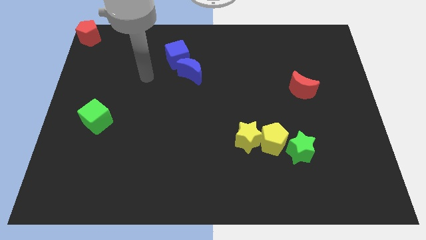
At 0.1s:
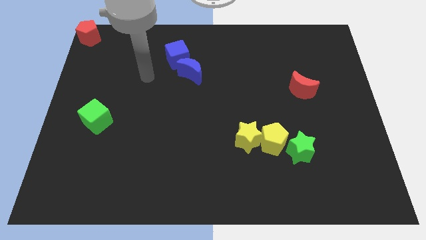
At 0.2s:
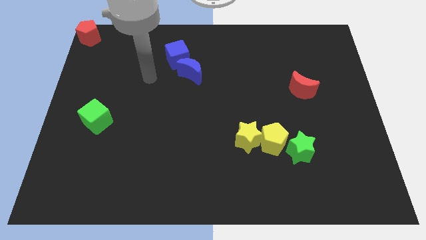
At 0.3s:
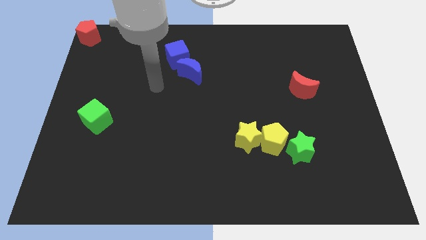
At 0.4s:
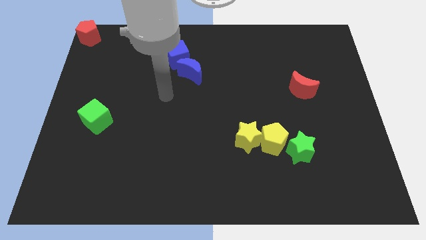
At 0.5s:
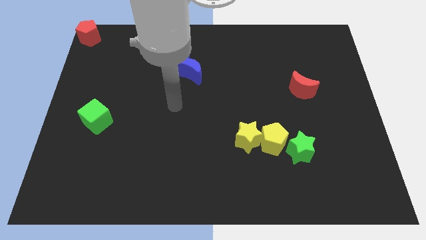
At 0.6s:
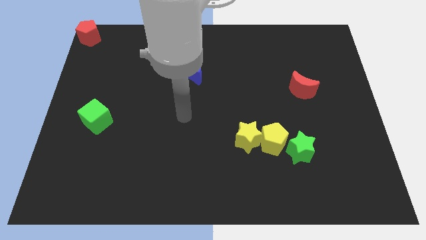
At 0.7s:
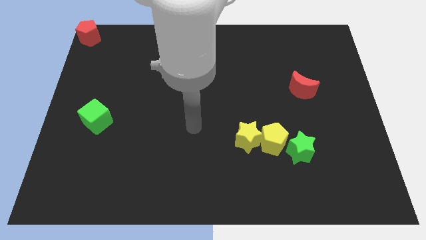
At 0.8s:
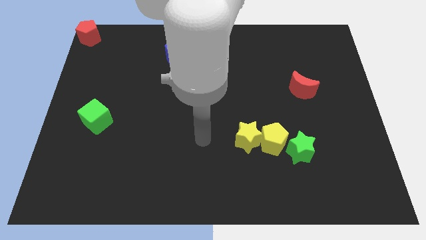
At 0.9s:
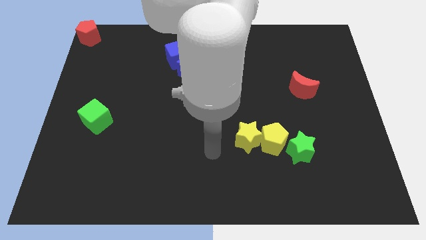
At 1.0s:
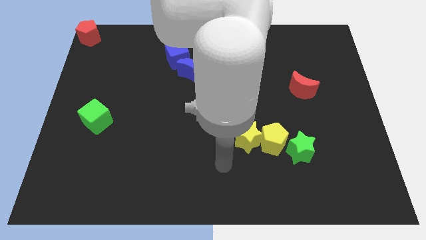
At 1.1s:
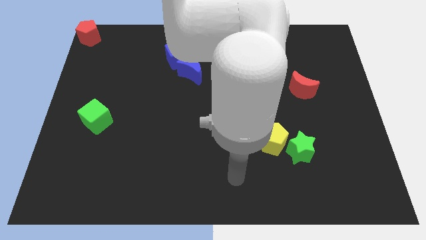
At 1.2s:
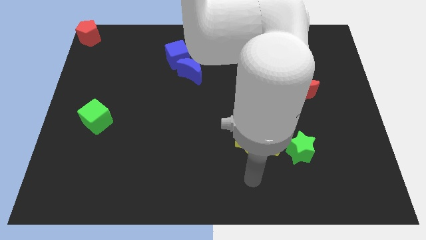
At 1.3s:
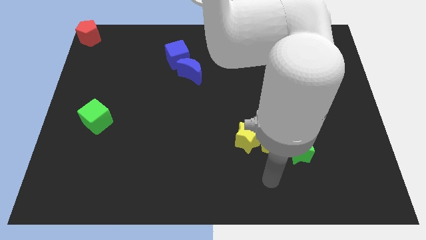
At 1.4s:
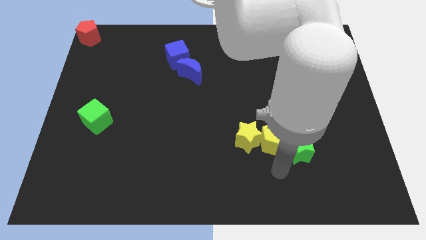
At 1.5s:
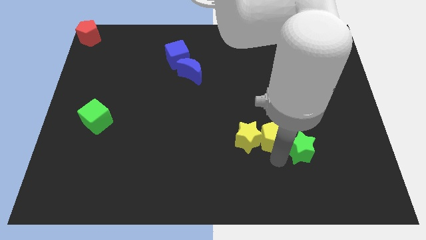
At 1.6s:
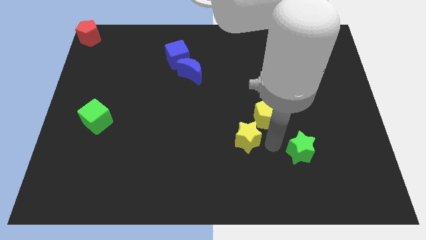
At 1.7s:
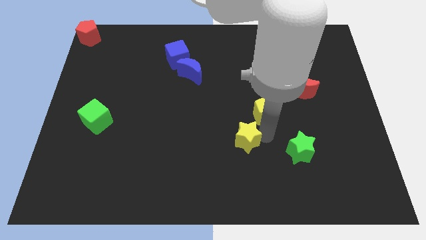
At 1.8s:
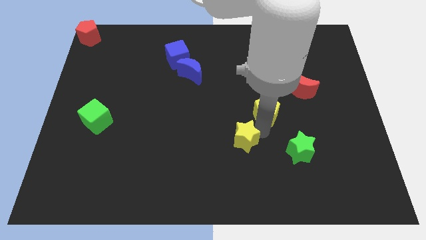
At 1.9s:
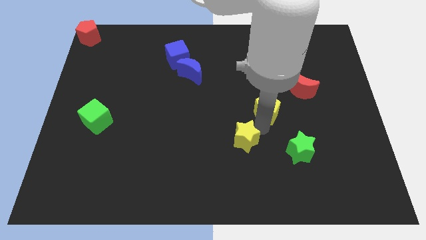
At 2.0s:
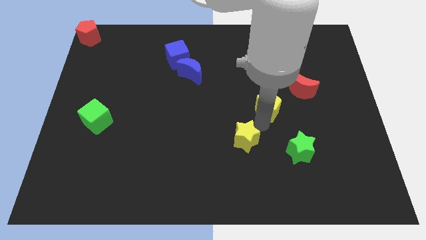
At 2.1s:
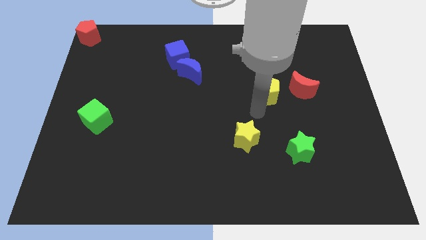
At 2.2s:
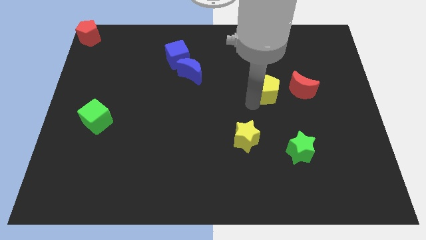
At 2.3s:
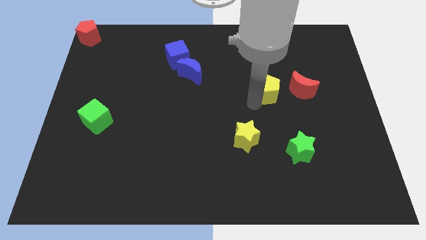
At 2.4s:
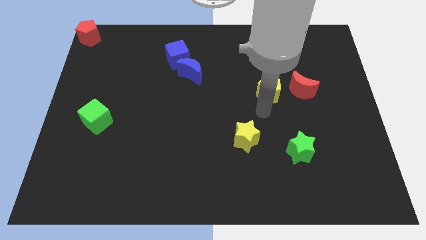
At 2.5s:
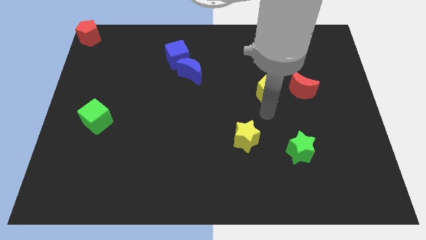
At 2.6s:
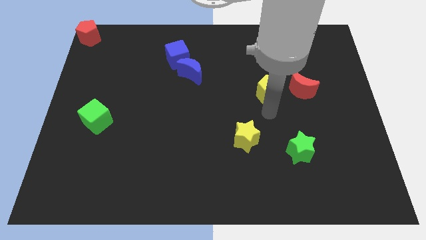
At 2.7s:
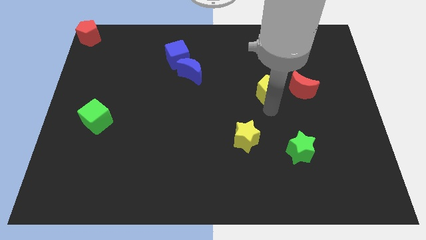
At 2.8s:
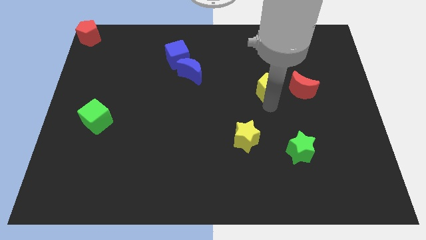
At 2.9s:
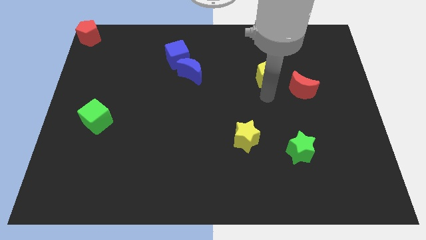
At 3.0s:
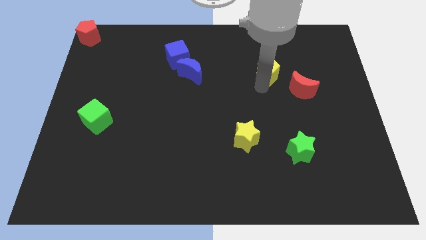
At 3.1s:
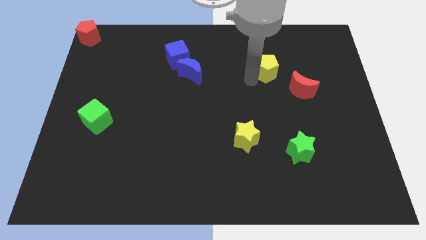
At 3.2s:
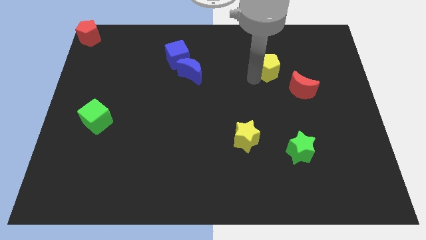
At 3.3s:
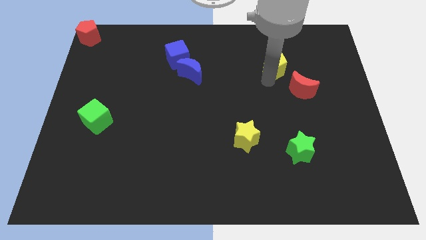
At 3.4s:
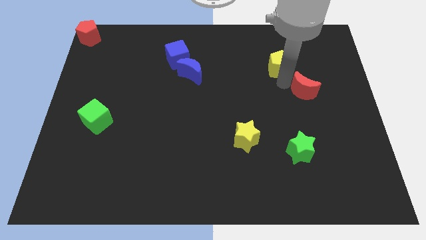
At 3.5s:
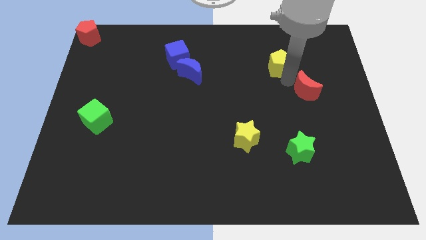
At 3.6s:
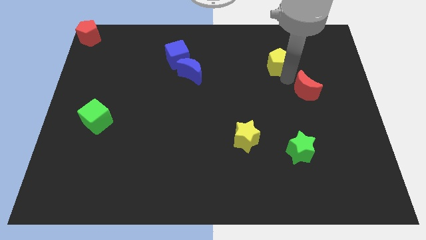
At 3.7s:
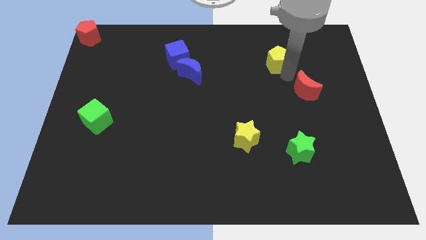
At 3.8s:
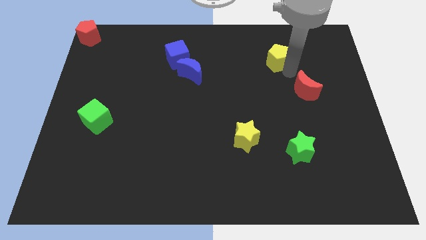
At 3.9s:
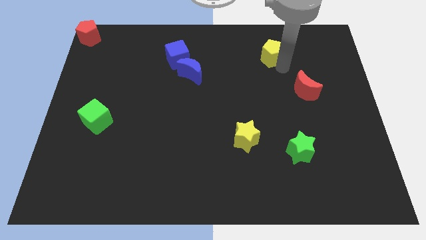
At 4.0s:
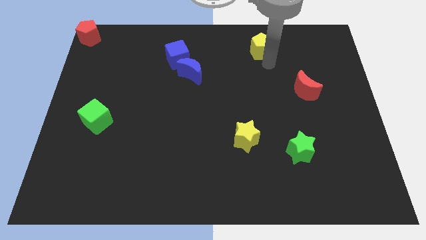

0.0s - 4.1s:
place the yellow pentagon diagonally to the top right of the red moon

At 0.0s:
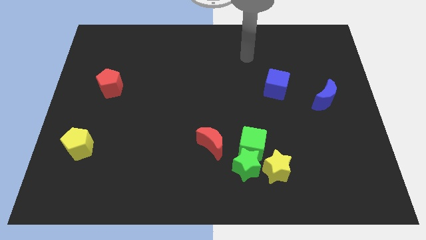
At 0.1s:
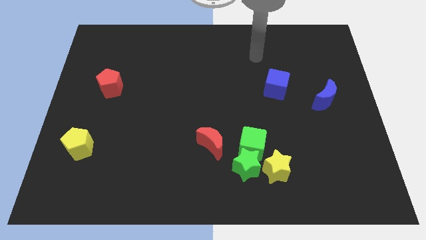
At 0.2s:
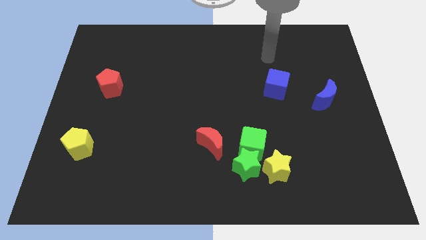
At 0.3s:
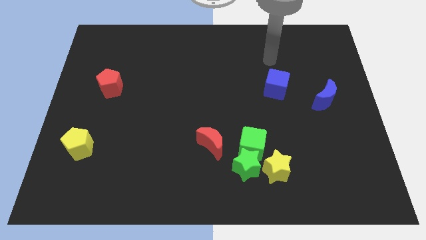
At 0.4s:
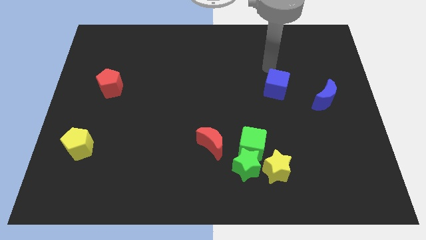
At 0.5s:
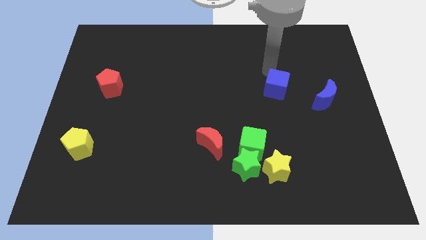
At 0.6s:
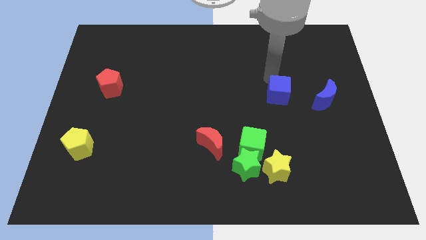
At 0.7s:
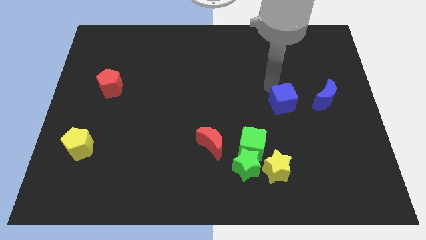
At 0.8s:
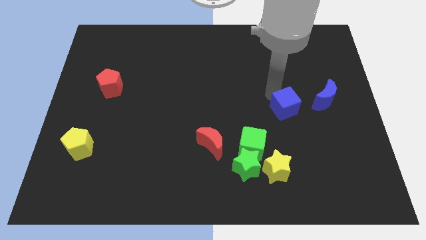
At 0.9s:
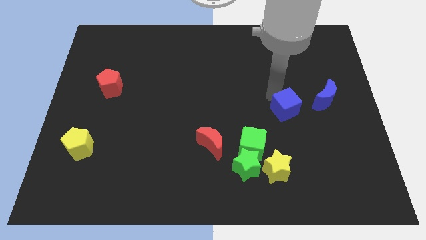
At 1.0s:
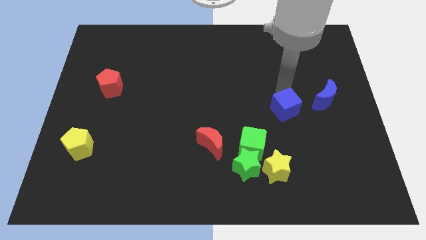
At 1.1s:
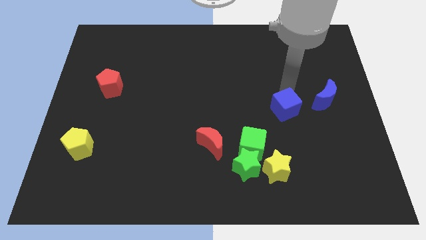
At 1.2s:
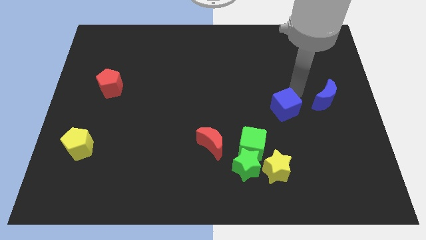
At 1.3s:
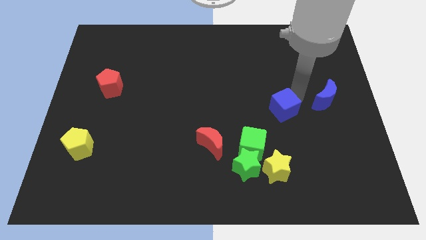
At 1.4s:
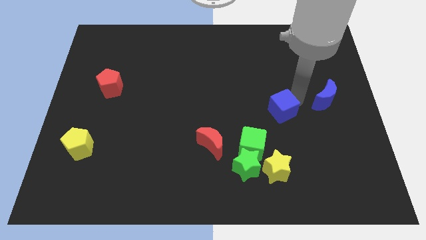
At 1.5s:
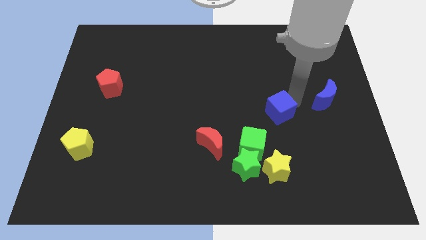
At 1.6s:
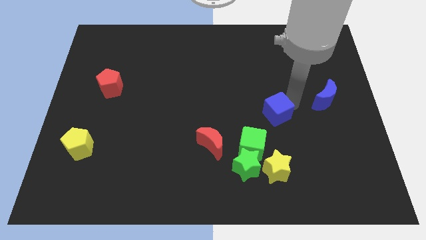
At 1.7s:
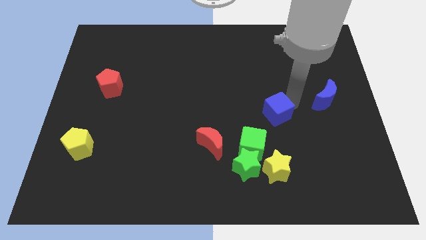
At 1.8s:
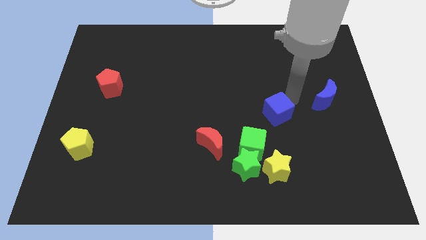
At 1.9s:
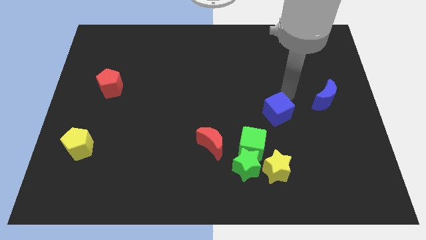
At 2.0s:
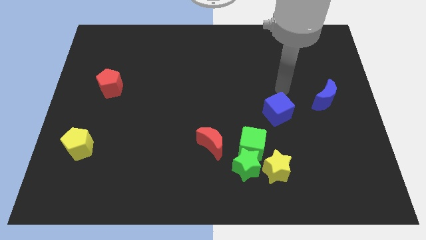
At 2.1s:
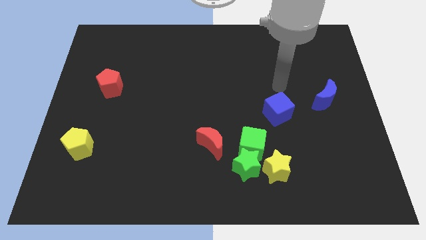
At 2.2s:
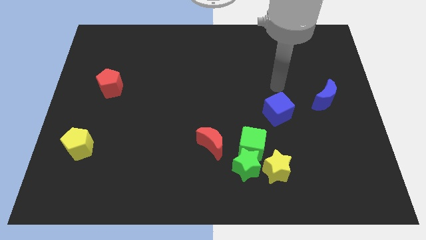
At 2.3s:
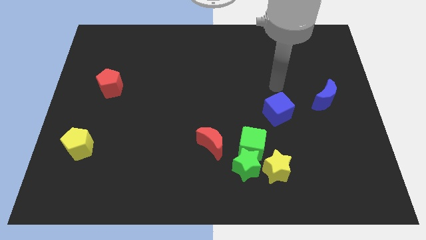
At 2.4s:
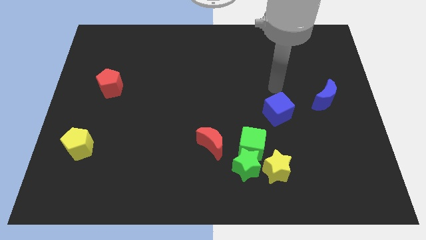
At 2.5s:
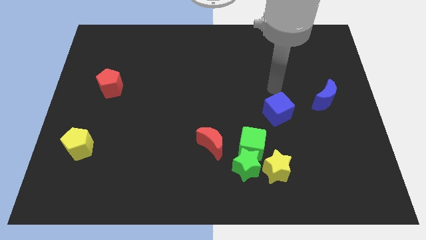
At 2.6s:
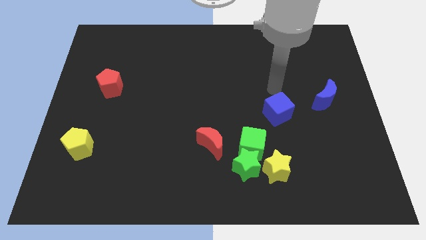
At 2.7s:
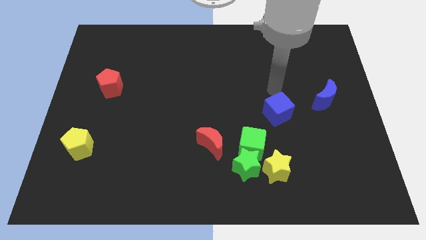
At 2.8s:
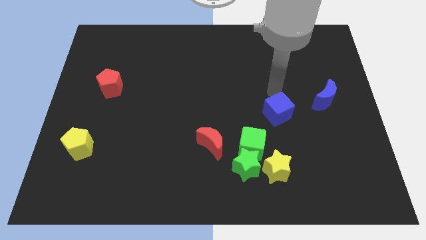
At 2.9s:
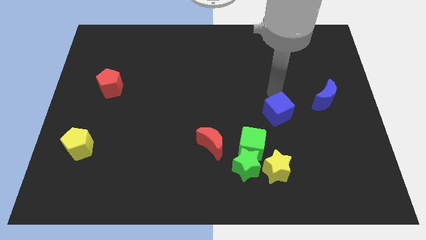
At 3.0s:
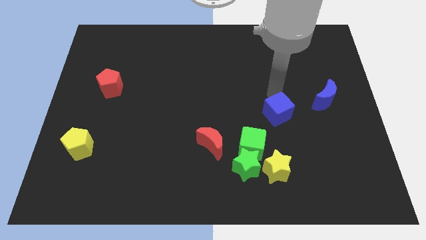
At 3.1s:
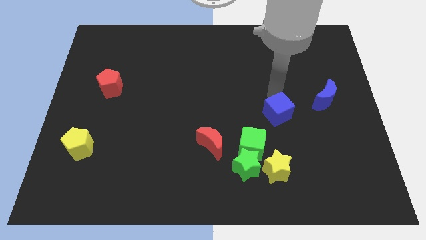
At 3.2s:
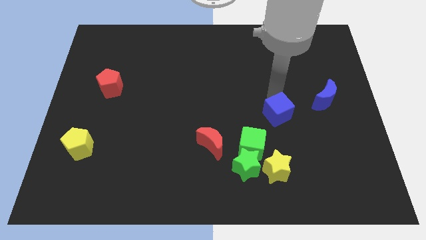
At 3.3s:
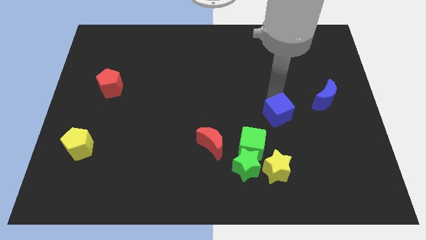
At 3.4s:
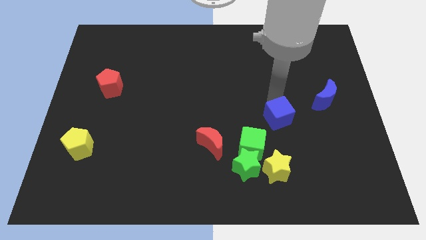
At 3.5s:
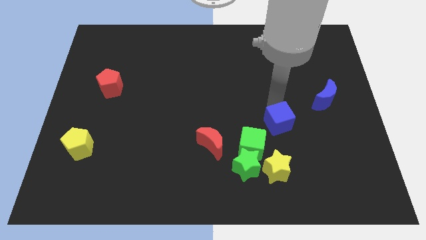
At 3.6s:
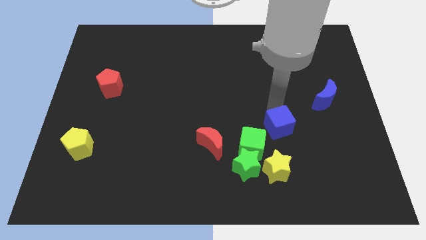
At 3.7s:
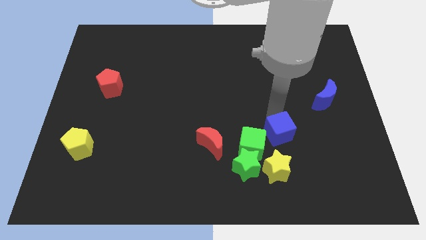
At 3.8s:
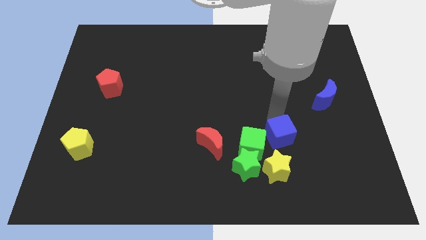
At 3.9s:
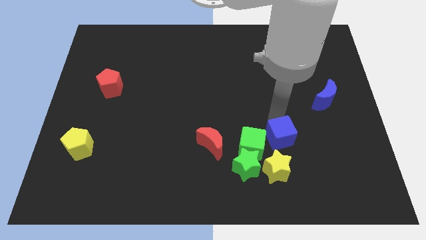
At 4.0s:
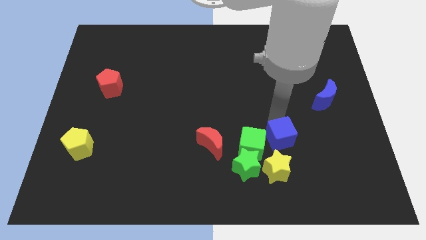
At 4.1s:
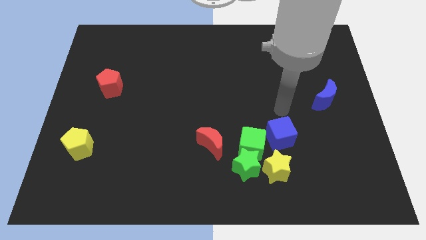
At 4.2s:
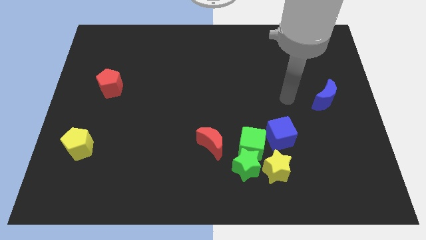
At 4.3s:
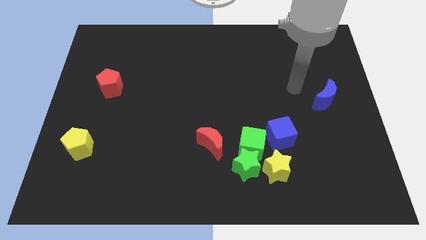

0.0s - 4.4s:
place the blue square above the yellow star

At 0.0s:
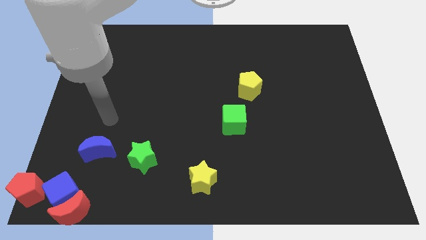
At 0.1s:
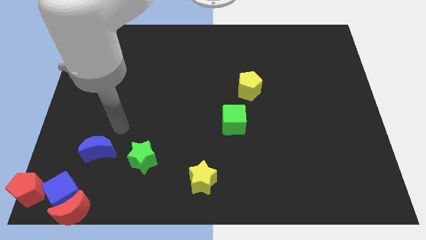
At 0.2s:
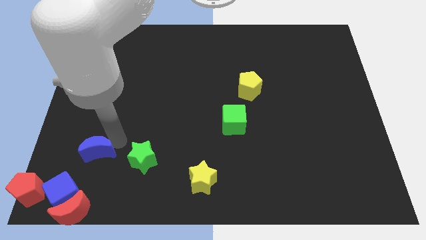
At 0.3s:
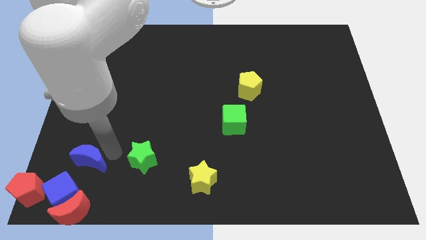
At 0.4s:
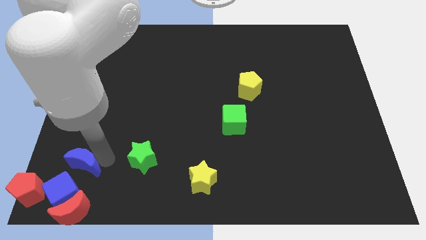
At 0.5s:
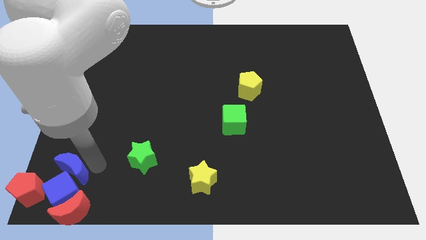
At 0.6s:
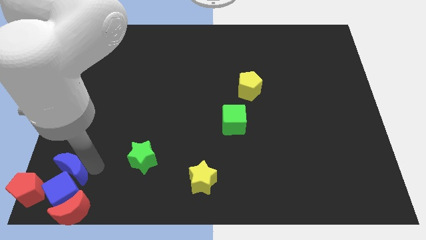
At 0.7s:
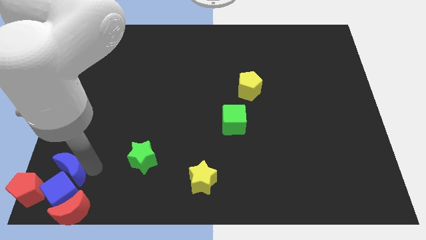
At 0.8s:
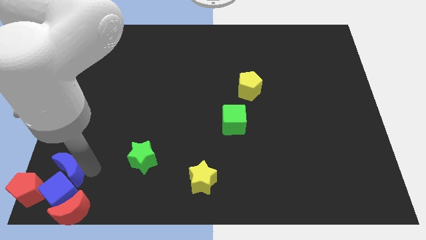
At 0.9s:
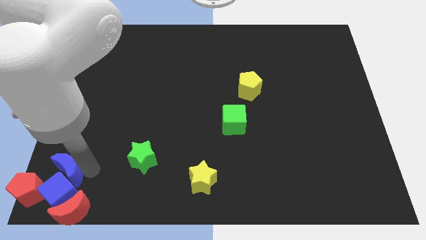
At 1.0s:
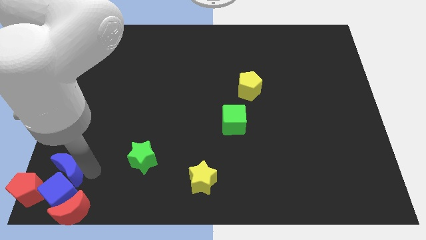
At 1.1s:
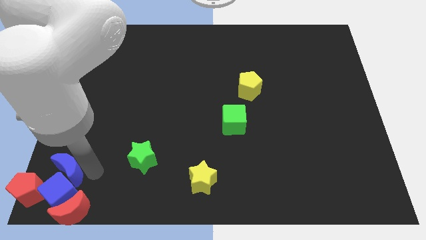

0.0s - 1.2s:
push the blue crescent into the blue cube
